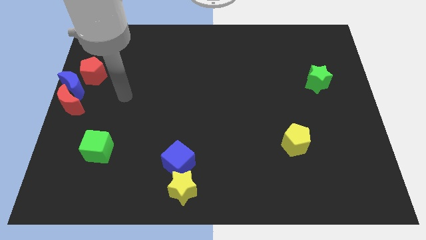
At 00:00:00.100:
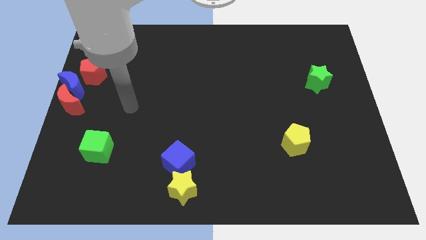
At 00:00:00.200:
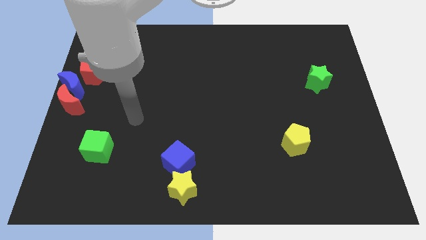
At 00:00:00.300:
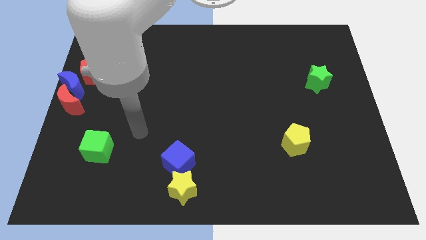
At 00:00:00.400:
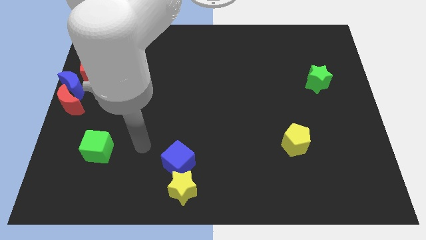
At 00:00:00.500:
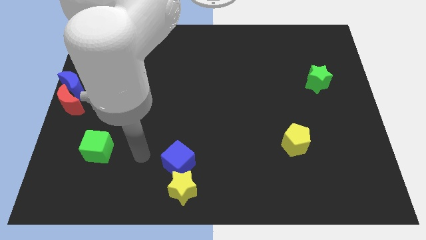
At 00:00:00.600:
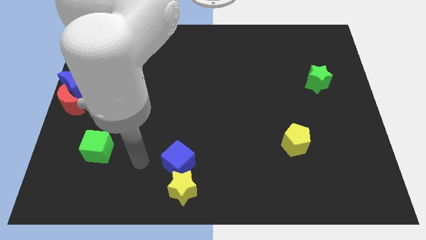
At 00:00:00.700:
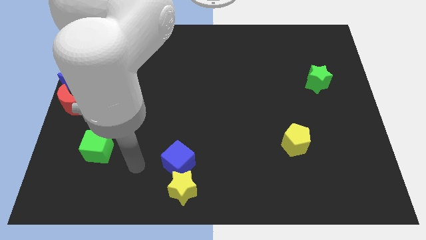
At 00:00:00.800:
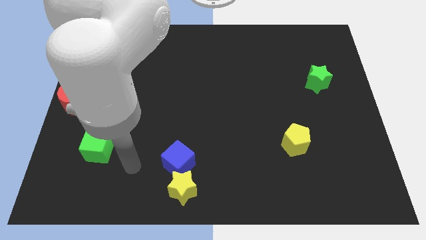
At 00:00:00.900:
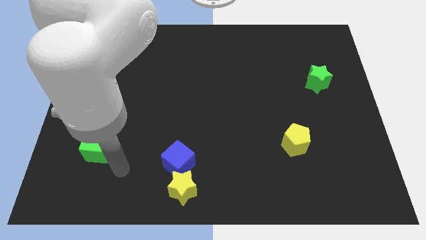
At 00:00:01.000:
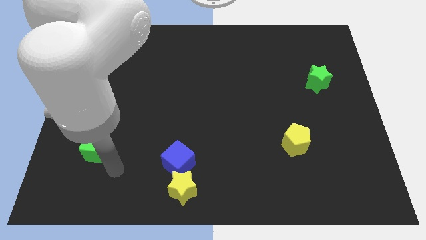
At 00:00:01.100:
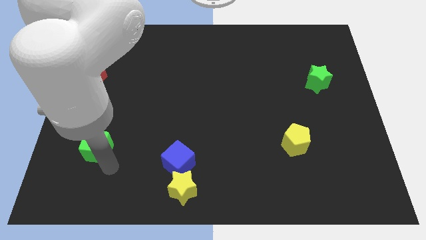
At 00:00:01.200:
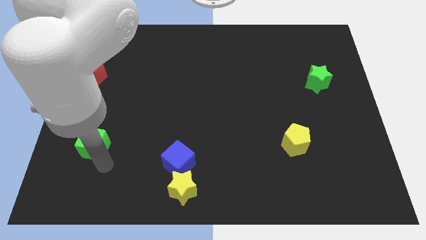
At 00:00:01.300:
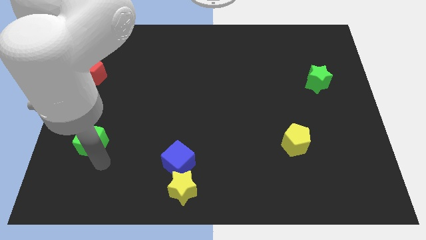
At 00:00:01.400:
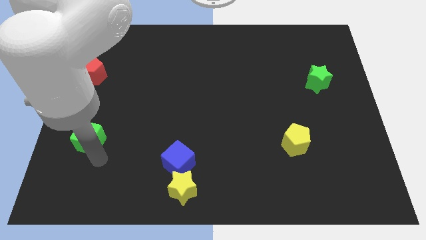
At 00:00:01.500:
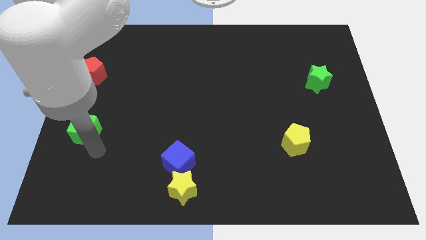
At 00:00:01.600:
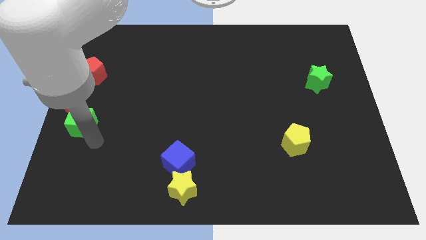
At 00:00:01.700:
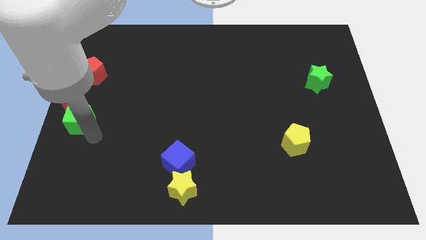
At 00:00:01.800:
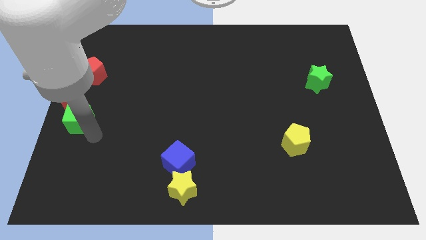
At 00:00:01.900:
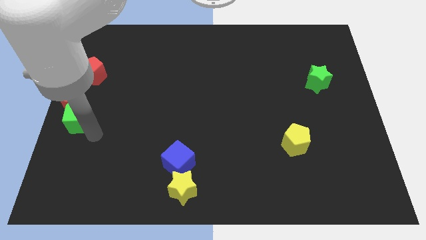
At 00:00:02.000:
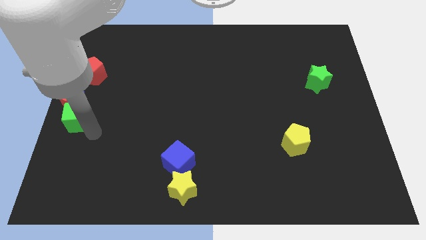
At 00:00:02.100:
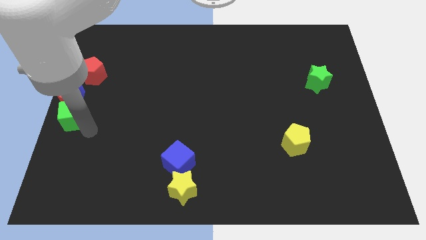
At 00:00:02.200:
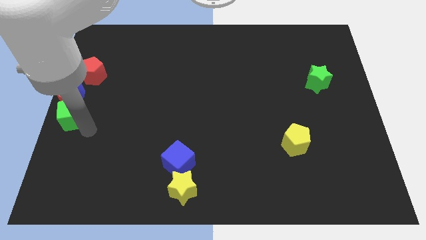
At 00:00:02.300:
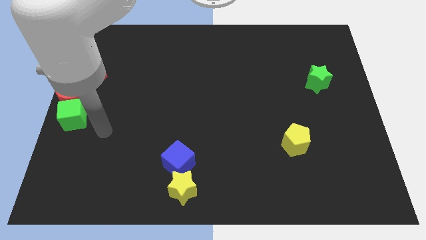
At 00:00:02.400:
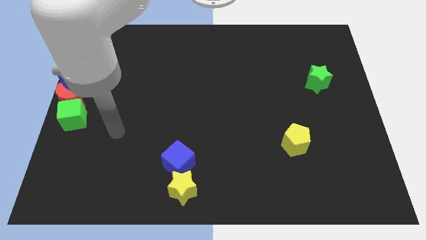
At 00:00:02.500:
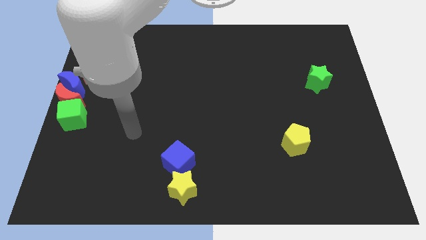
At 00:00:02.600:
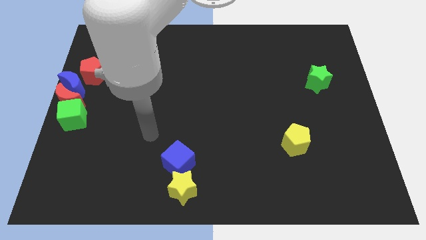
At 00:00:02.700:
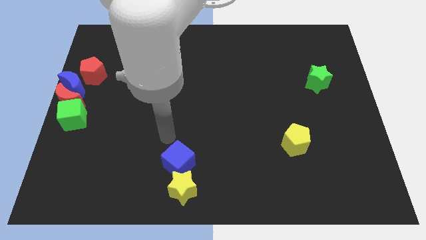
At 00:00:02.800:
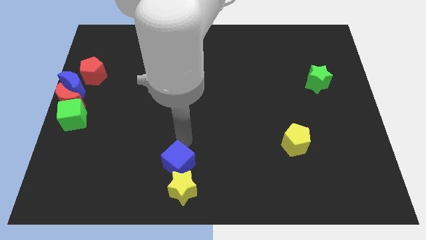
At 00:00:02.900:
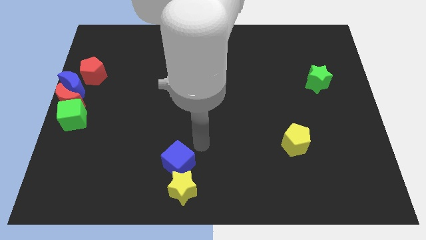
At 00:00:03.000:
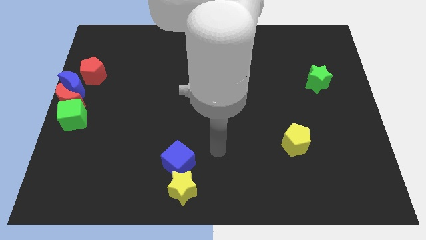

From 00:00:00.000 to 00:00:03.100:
slide green cube below red moon

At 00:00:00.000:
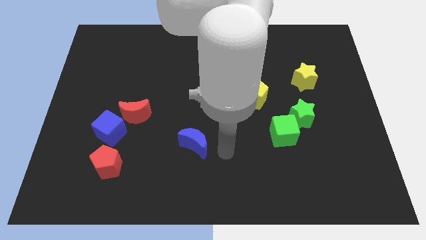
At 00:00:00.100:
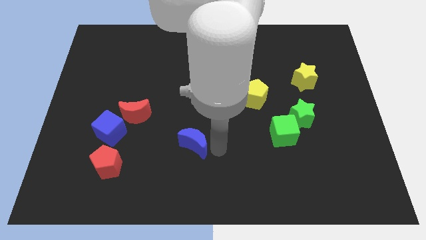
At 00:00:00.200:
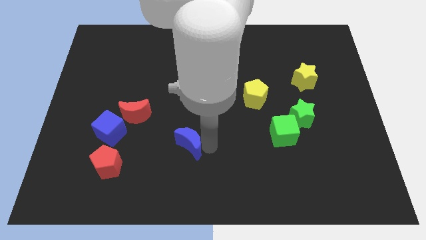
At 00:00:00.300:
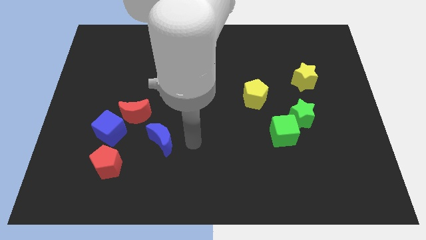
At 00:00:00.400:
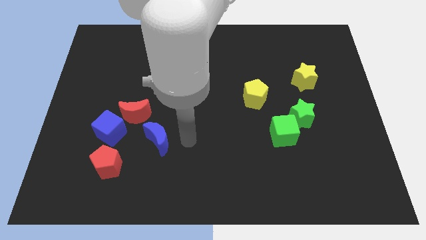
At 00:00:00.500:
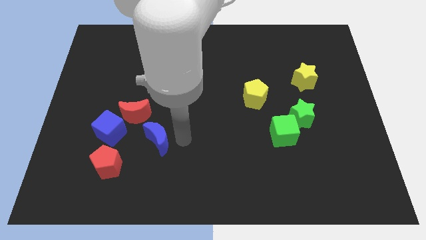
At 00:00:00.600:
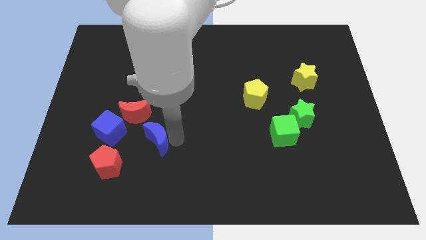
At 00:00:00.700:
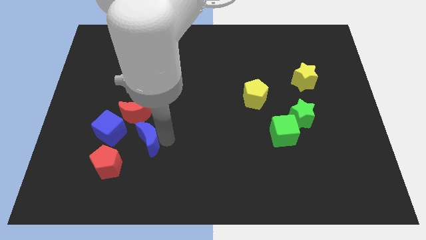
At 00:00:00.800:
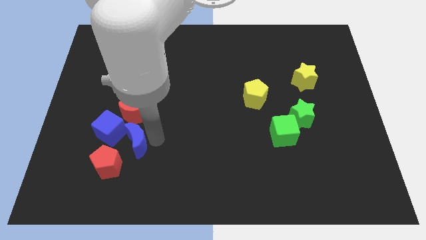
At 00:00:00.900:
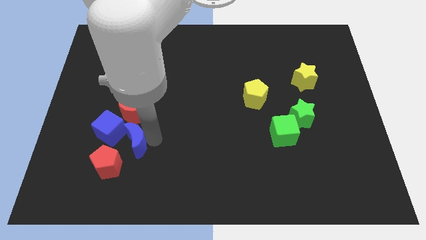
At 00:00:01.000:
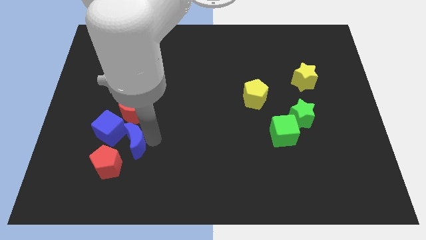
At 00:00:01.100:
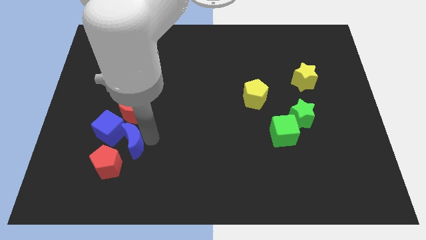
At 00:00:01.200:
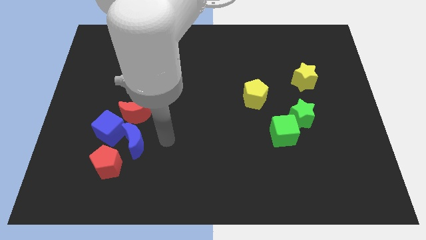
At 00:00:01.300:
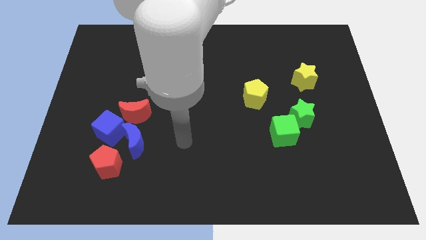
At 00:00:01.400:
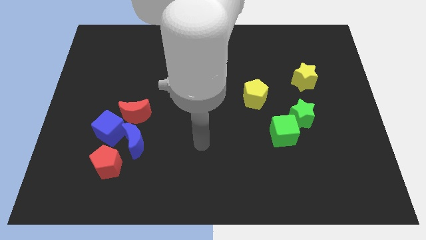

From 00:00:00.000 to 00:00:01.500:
move the blue moon to the right of the blue cube

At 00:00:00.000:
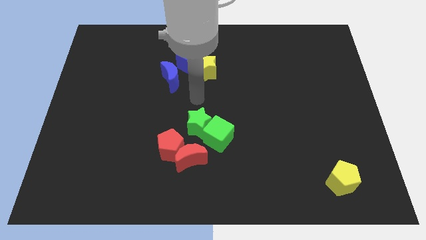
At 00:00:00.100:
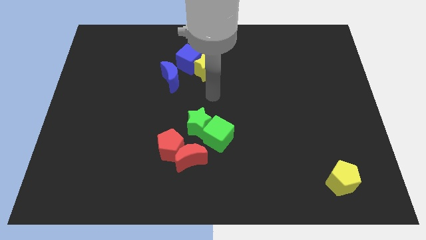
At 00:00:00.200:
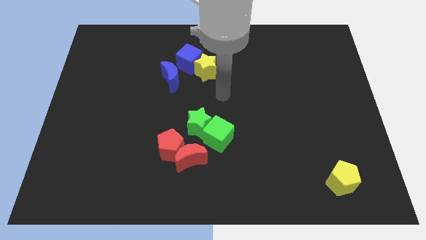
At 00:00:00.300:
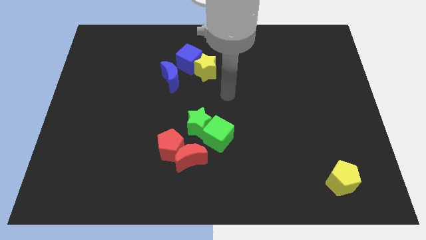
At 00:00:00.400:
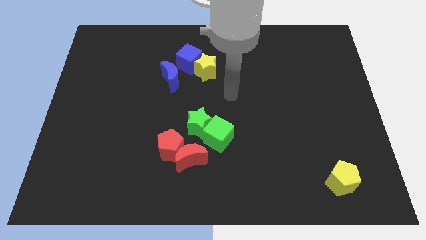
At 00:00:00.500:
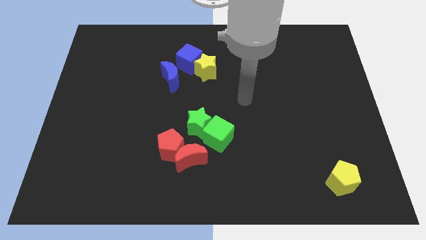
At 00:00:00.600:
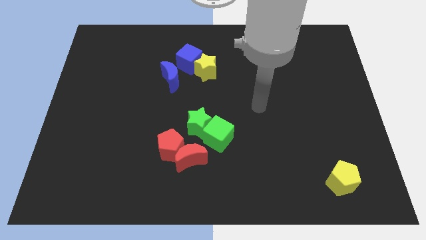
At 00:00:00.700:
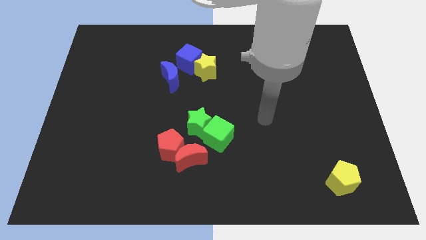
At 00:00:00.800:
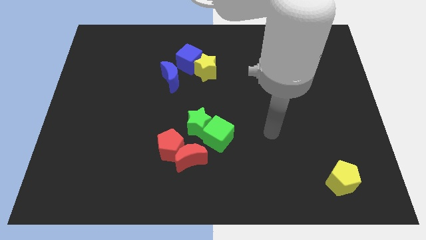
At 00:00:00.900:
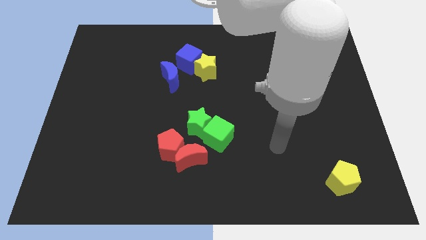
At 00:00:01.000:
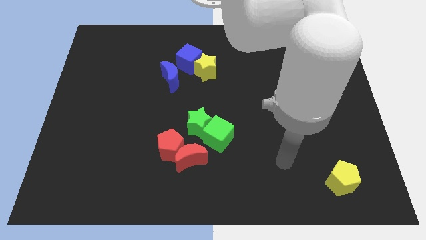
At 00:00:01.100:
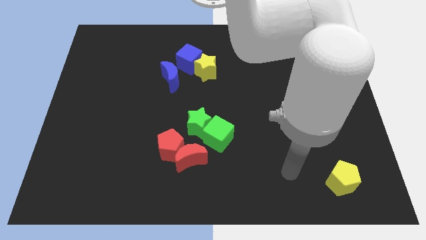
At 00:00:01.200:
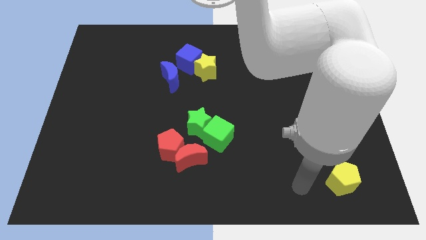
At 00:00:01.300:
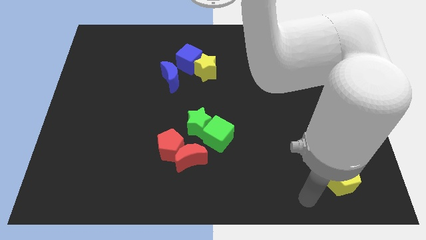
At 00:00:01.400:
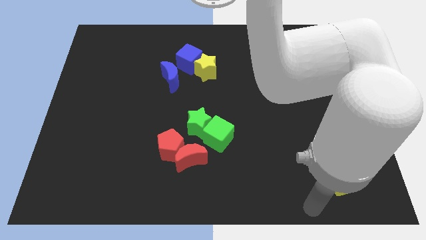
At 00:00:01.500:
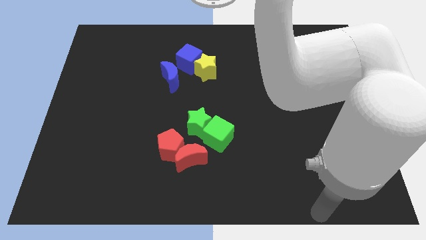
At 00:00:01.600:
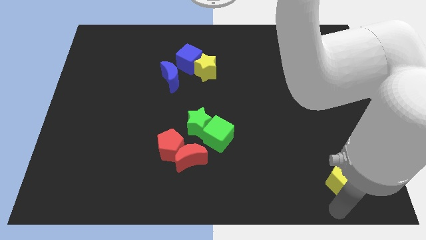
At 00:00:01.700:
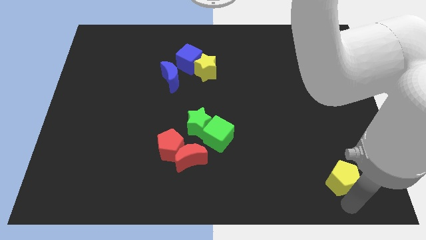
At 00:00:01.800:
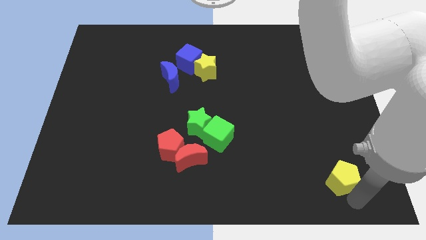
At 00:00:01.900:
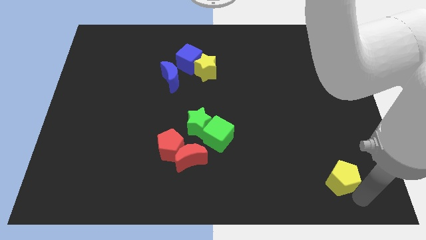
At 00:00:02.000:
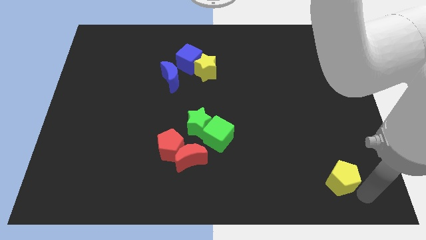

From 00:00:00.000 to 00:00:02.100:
point your arm at the bottom of yellow pentagon

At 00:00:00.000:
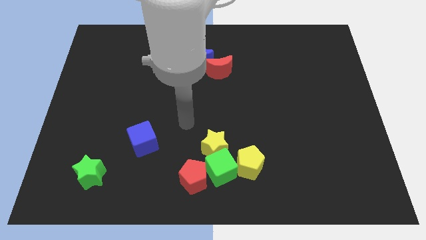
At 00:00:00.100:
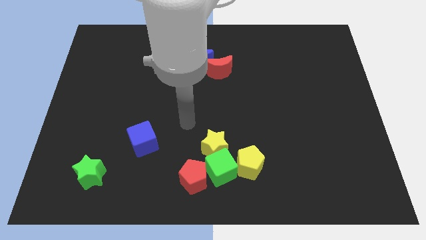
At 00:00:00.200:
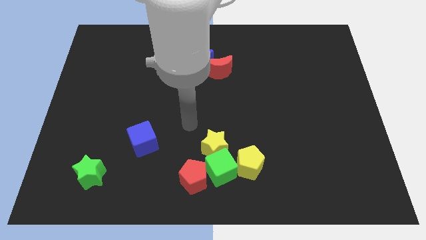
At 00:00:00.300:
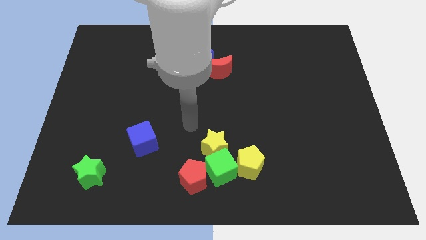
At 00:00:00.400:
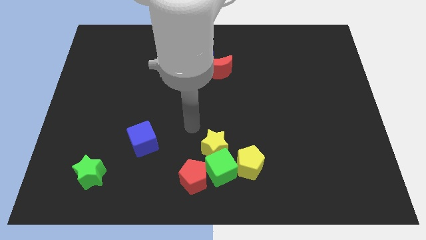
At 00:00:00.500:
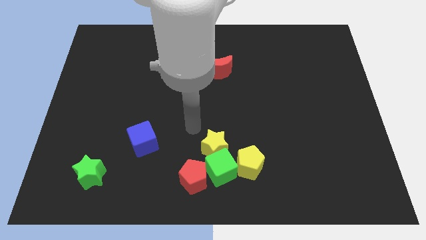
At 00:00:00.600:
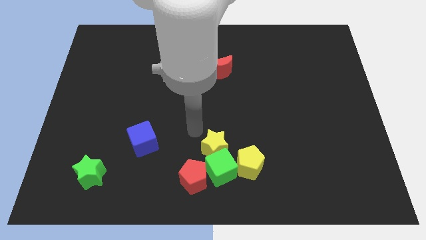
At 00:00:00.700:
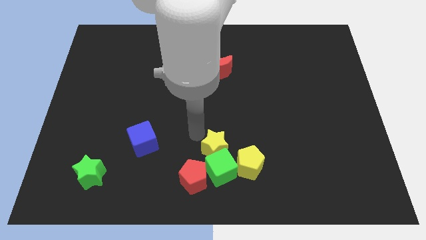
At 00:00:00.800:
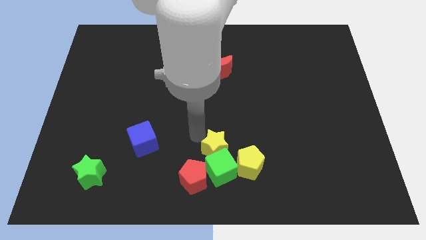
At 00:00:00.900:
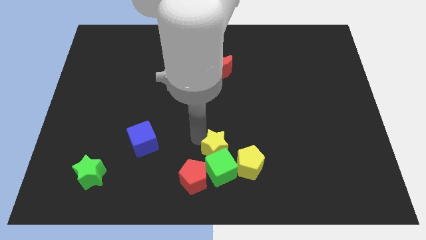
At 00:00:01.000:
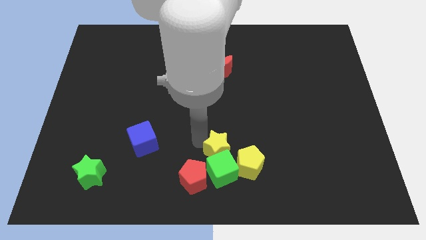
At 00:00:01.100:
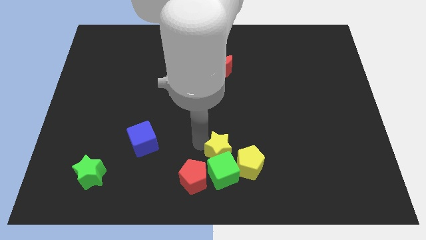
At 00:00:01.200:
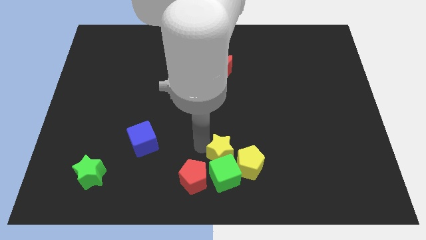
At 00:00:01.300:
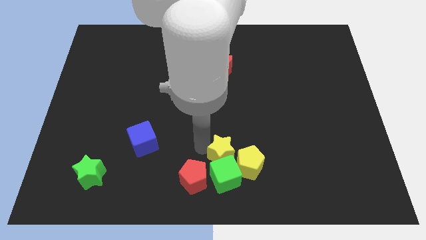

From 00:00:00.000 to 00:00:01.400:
move the yellow star and green cube towards the center of the board

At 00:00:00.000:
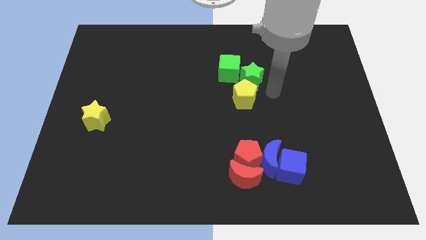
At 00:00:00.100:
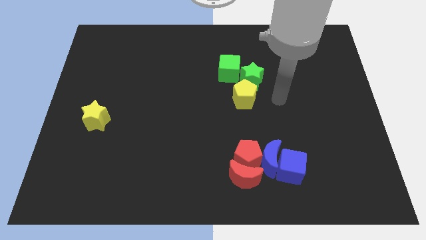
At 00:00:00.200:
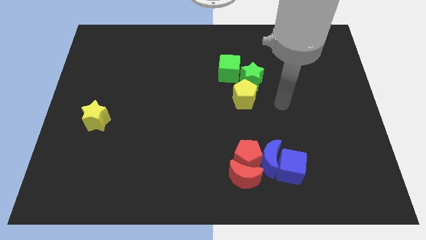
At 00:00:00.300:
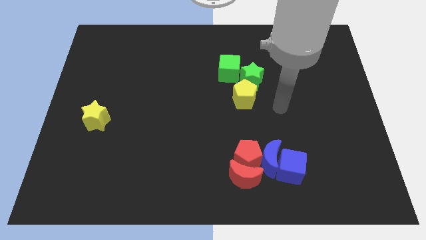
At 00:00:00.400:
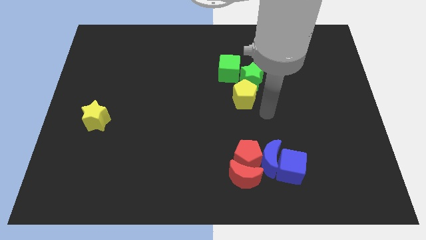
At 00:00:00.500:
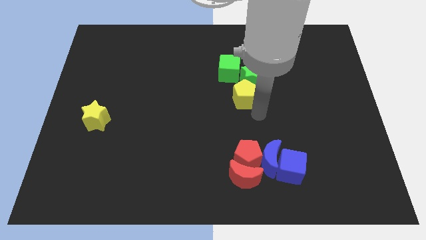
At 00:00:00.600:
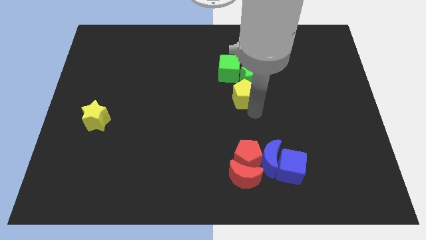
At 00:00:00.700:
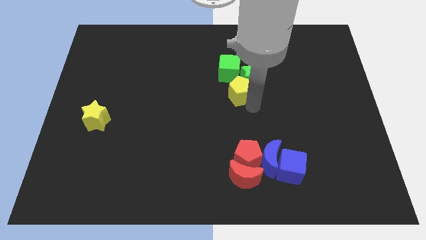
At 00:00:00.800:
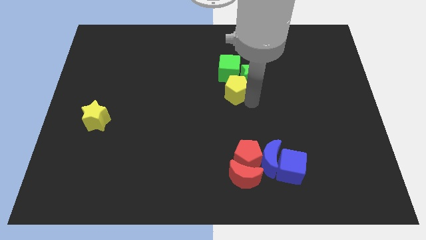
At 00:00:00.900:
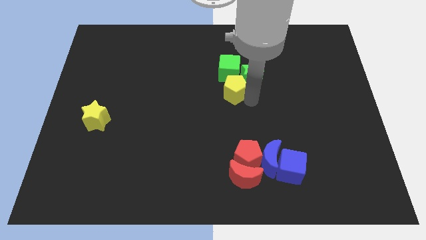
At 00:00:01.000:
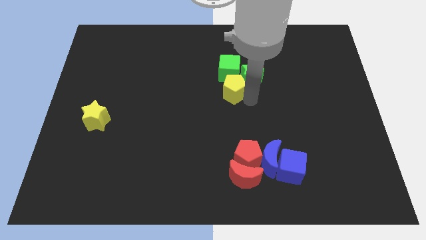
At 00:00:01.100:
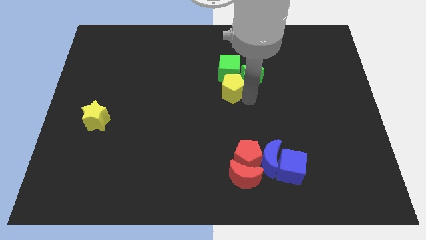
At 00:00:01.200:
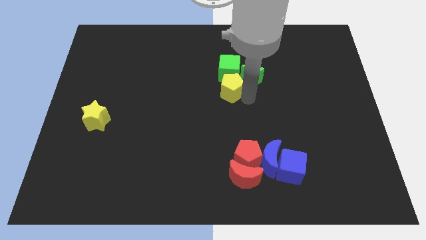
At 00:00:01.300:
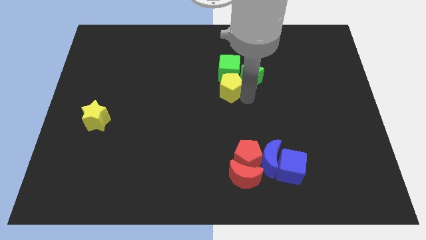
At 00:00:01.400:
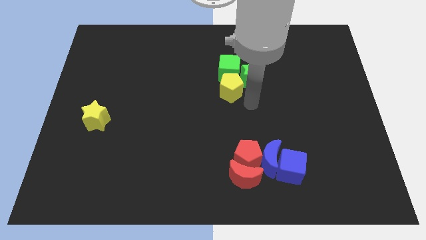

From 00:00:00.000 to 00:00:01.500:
move the yellow pentagon to the bottom of the green cube
